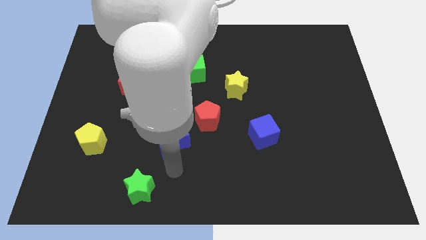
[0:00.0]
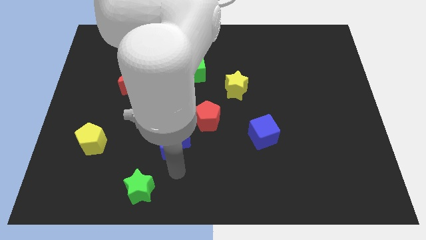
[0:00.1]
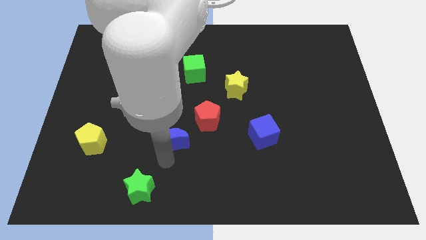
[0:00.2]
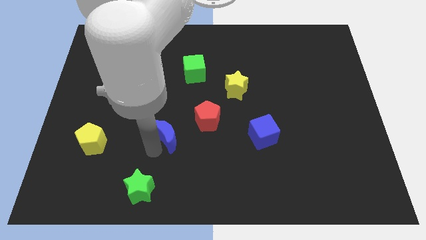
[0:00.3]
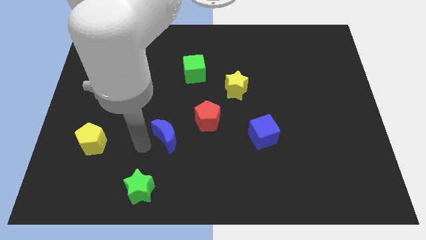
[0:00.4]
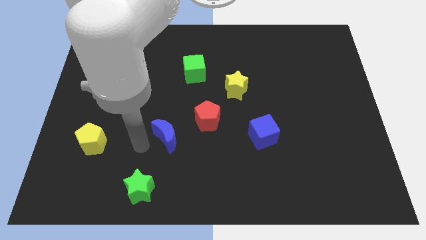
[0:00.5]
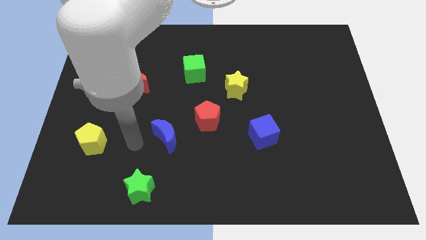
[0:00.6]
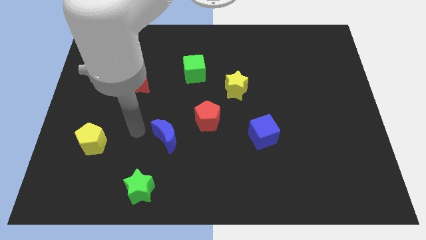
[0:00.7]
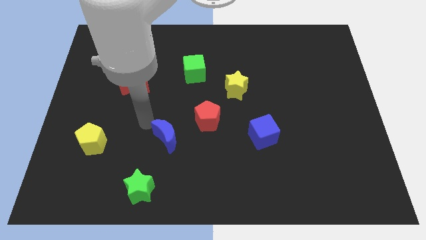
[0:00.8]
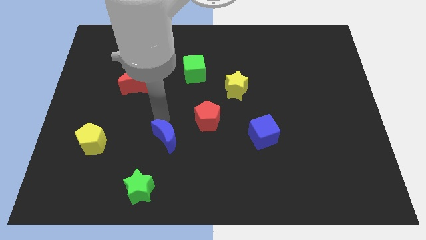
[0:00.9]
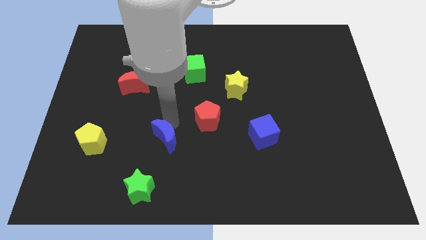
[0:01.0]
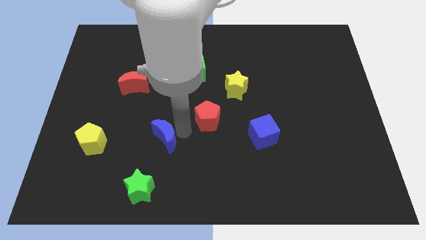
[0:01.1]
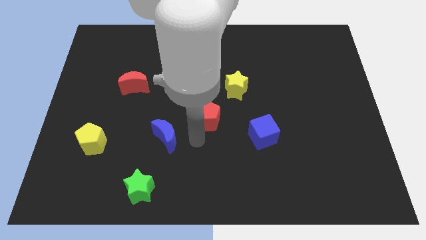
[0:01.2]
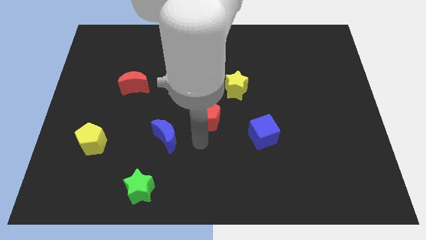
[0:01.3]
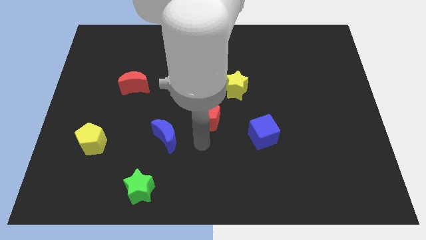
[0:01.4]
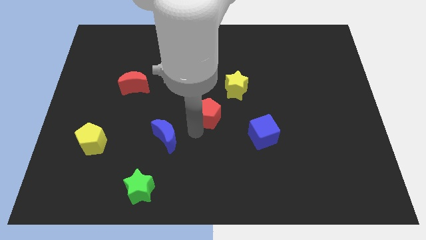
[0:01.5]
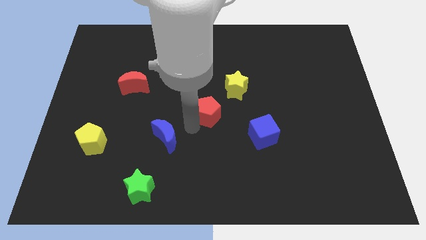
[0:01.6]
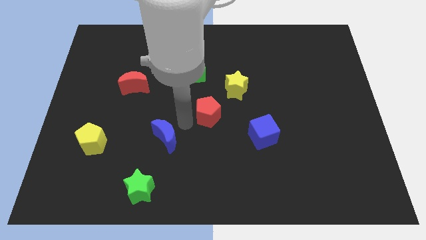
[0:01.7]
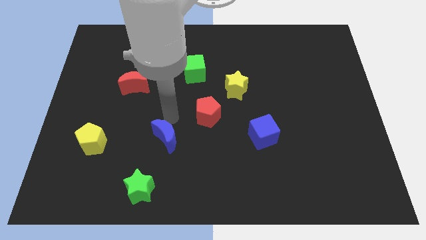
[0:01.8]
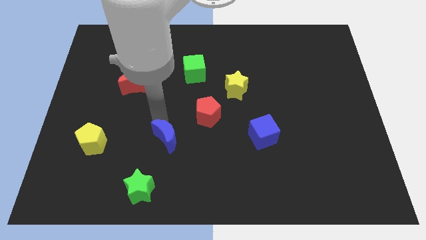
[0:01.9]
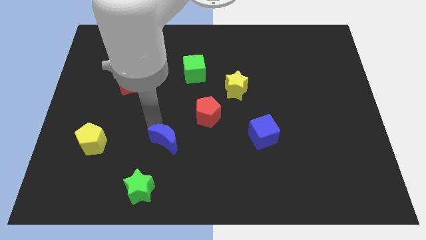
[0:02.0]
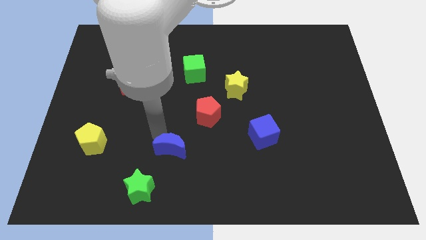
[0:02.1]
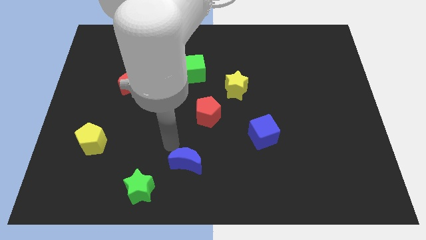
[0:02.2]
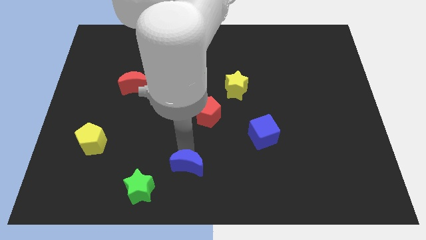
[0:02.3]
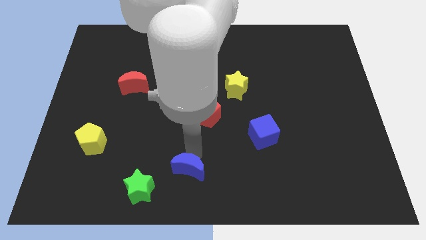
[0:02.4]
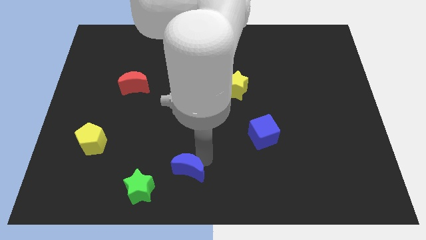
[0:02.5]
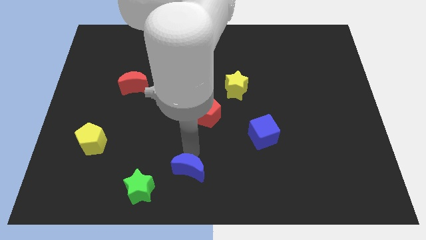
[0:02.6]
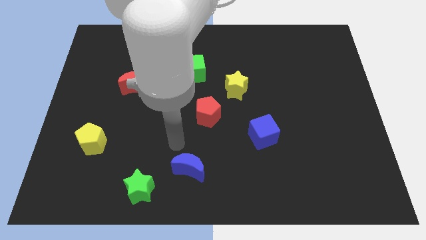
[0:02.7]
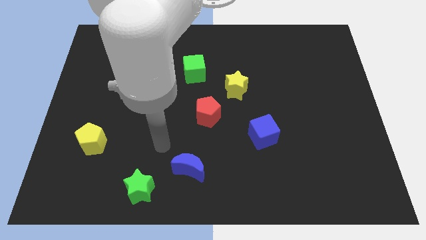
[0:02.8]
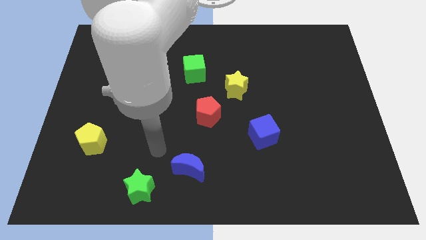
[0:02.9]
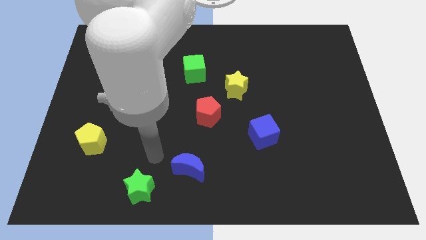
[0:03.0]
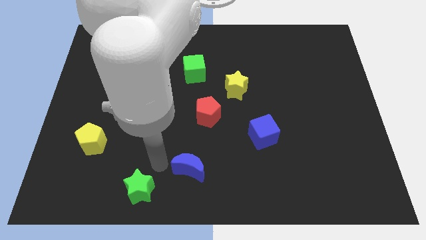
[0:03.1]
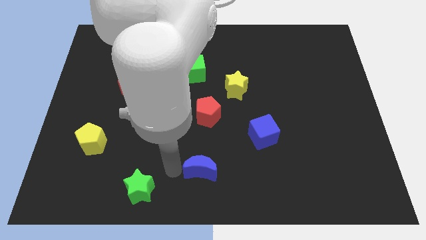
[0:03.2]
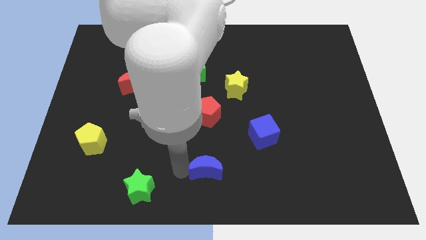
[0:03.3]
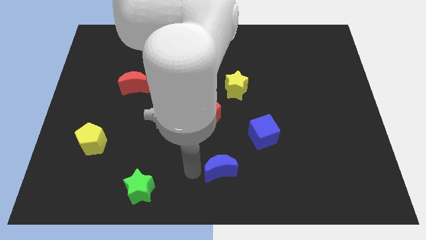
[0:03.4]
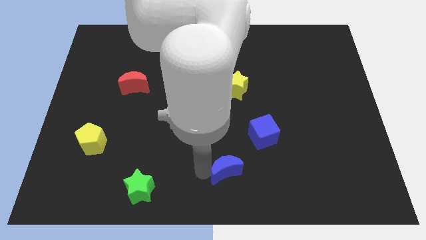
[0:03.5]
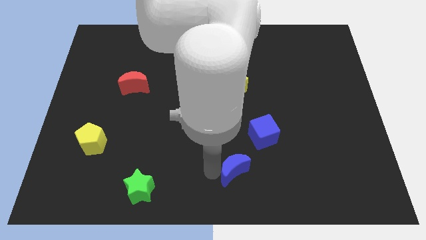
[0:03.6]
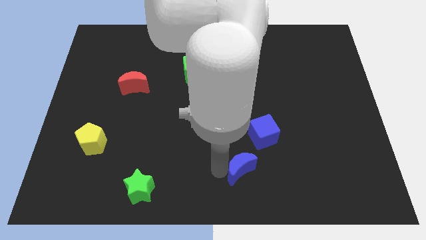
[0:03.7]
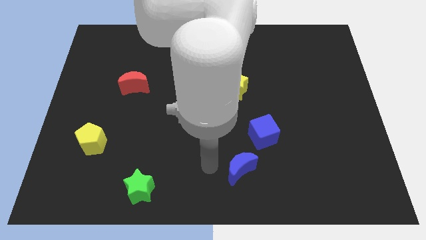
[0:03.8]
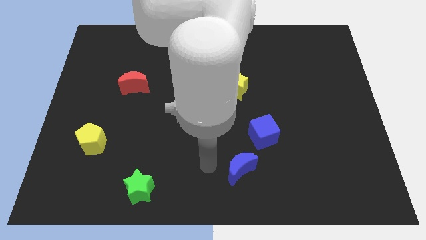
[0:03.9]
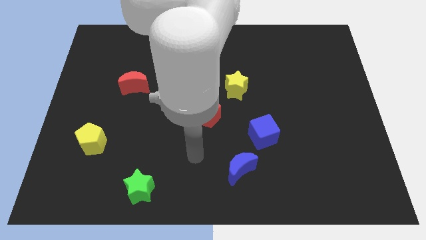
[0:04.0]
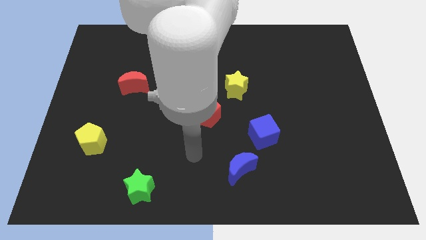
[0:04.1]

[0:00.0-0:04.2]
place blue moon near blue cube

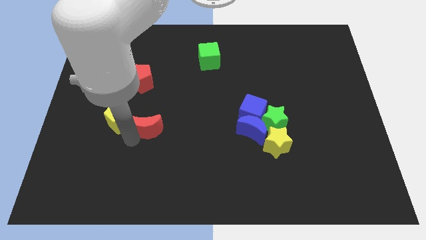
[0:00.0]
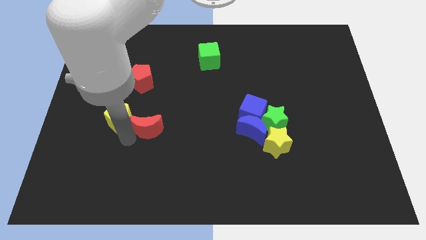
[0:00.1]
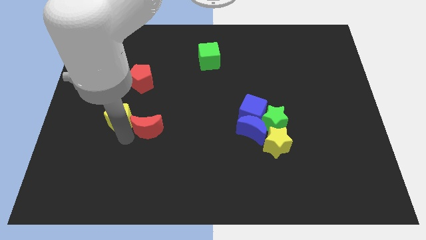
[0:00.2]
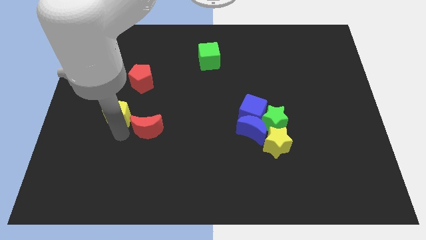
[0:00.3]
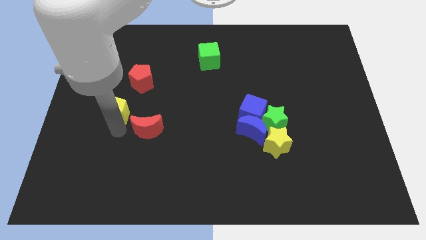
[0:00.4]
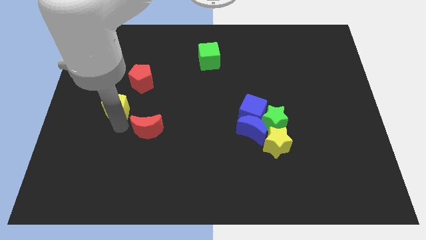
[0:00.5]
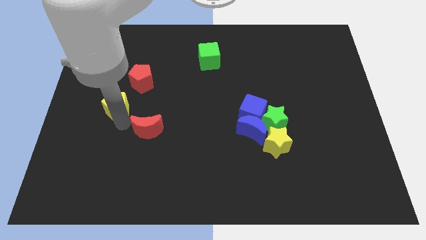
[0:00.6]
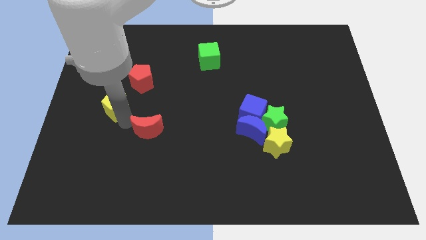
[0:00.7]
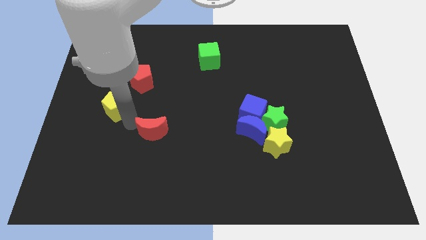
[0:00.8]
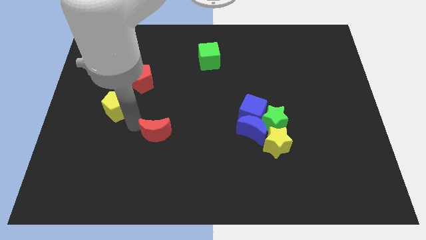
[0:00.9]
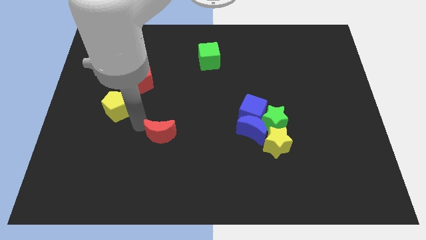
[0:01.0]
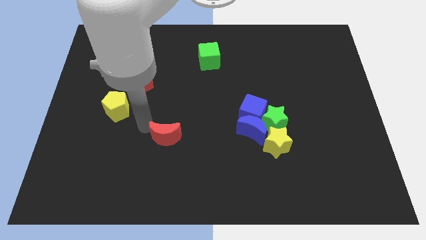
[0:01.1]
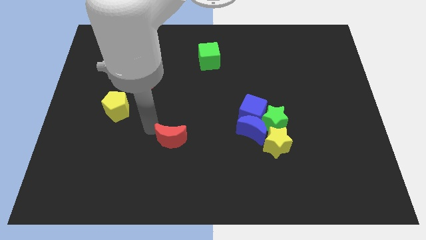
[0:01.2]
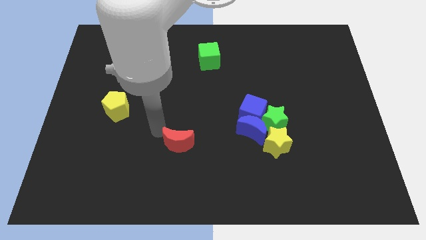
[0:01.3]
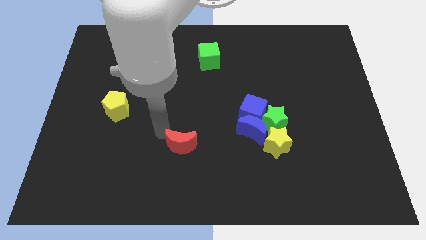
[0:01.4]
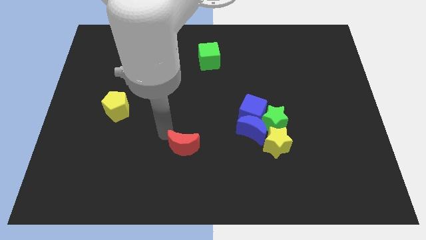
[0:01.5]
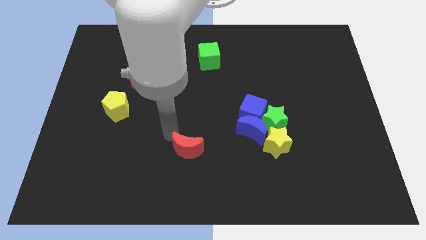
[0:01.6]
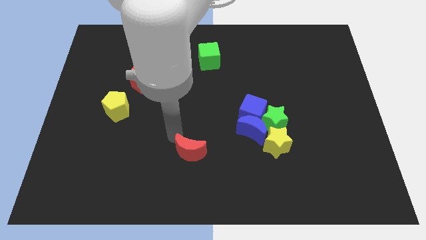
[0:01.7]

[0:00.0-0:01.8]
separate the red crescent from the yellow pentagon

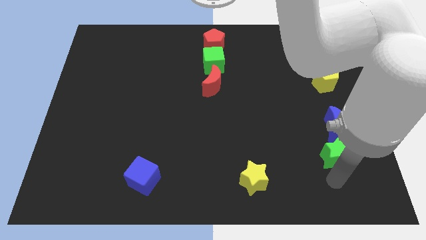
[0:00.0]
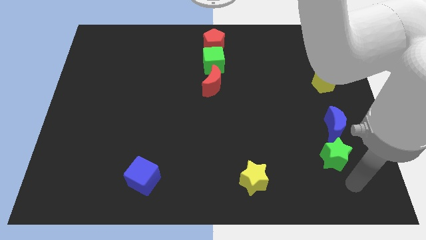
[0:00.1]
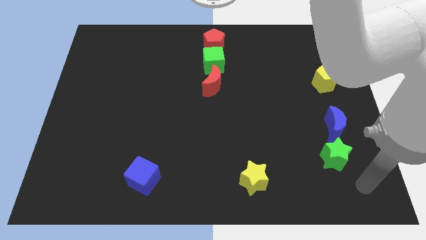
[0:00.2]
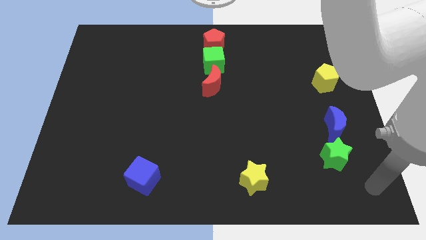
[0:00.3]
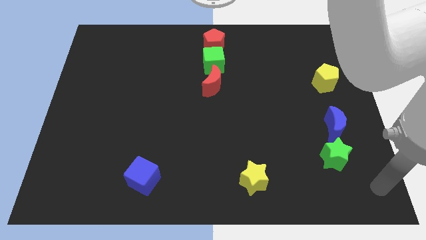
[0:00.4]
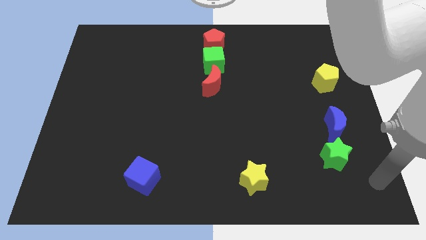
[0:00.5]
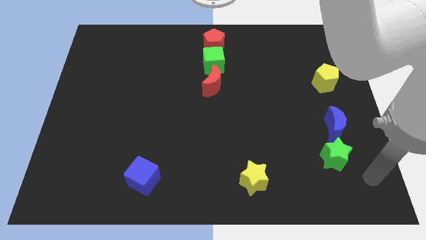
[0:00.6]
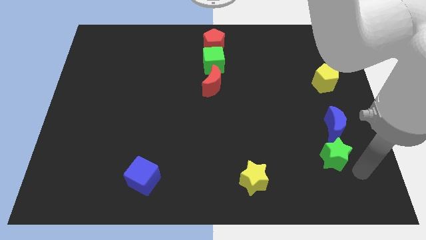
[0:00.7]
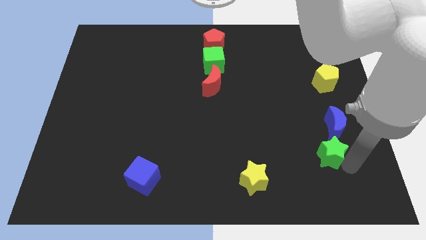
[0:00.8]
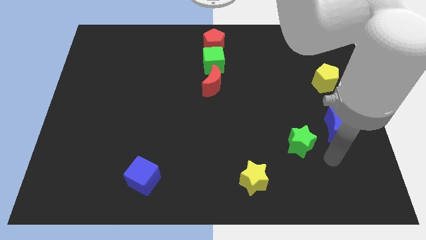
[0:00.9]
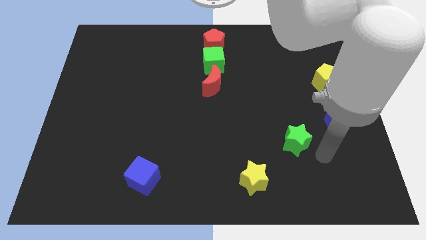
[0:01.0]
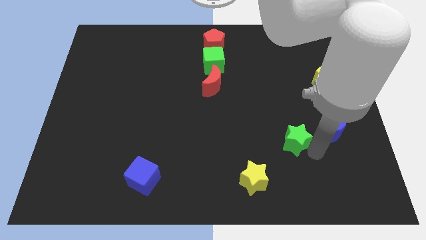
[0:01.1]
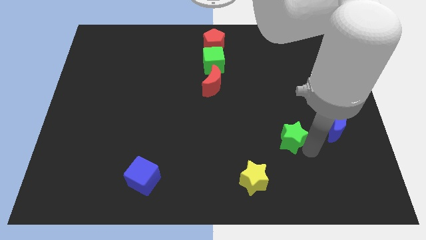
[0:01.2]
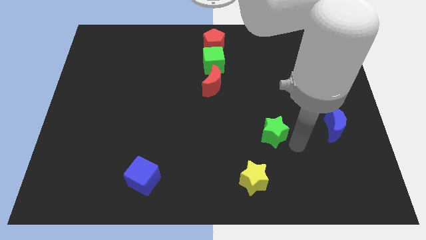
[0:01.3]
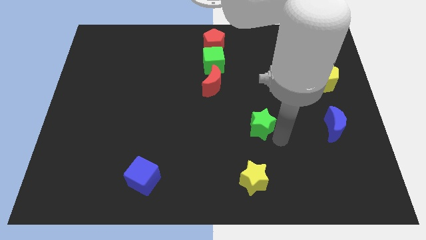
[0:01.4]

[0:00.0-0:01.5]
move green star away from the blue moon

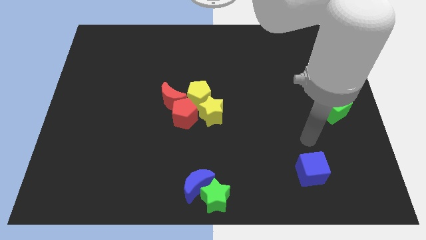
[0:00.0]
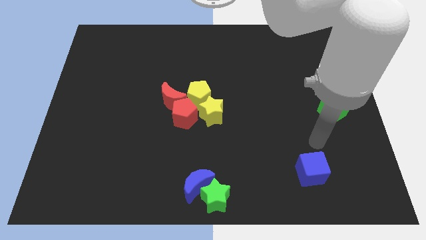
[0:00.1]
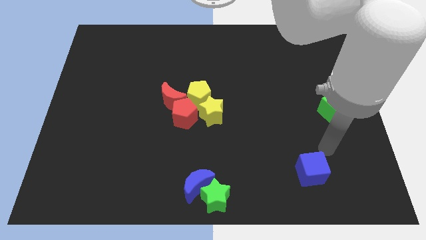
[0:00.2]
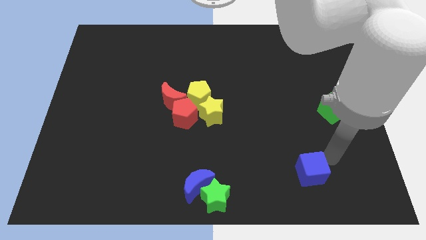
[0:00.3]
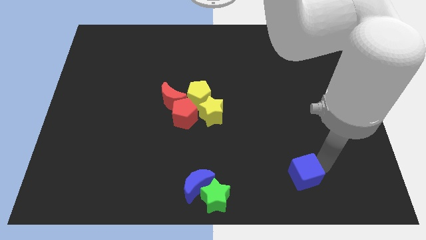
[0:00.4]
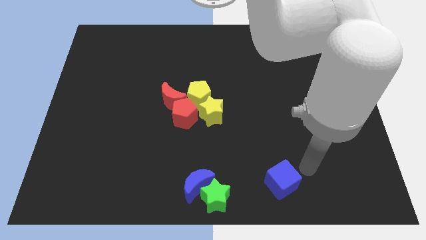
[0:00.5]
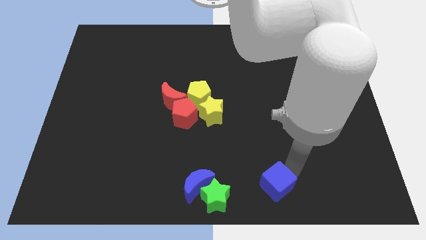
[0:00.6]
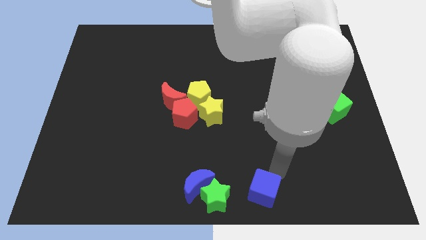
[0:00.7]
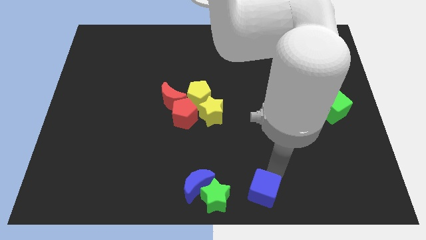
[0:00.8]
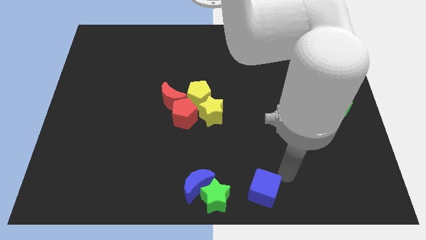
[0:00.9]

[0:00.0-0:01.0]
move the blue cube to the right of the green star

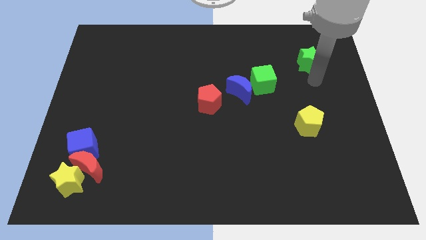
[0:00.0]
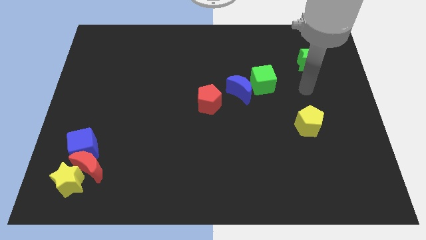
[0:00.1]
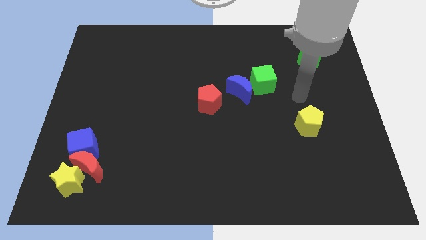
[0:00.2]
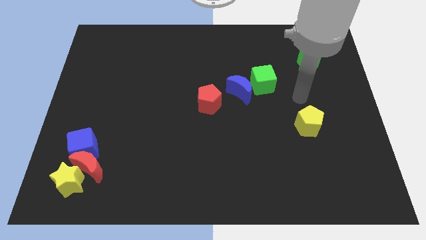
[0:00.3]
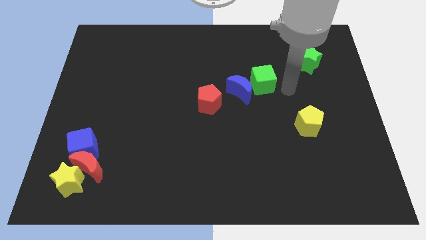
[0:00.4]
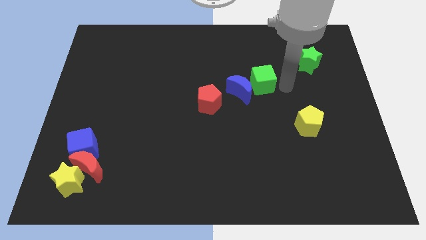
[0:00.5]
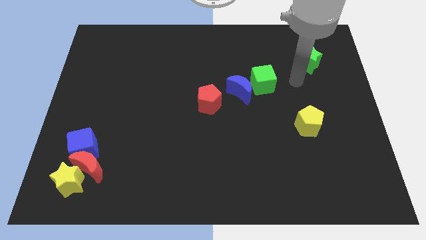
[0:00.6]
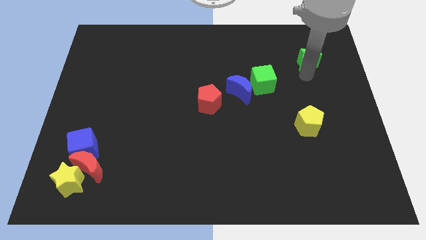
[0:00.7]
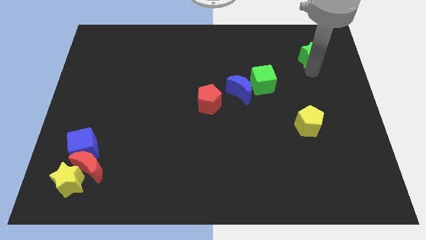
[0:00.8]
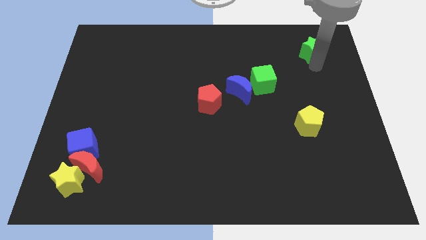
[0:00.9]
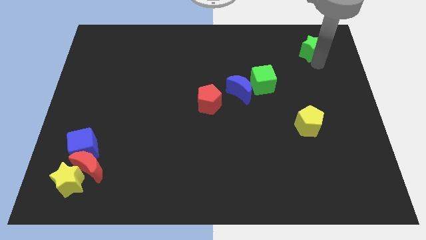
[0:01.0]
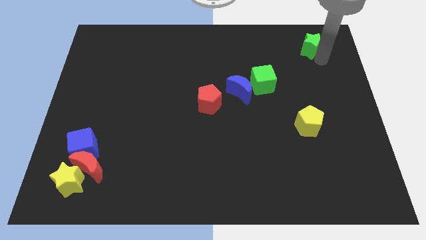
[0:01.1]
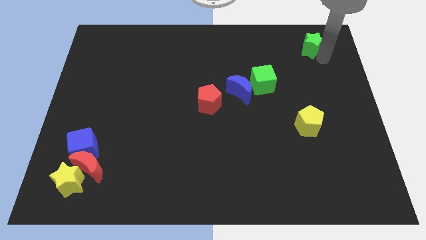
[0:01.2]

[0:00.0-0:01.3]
move the green star slightly to the top
